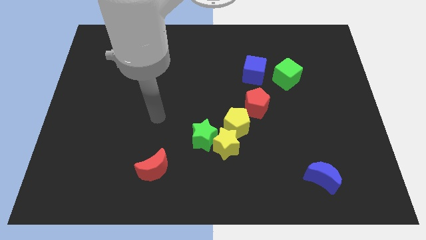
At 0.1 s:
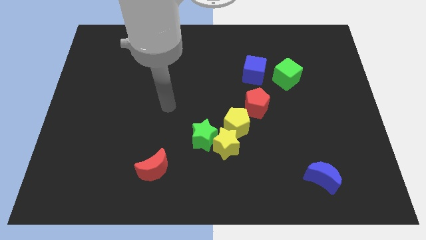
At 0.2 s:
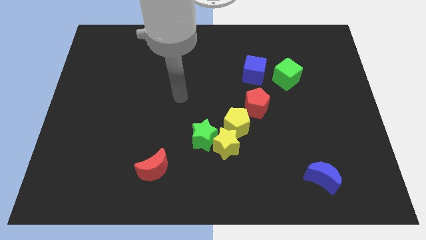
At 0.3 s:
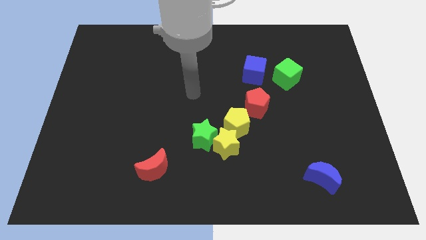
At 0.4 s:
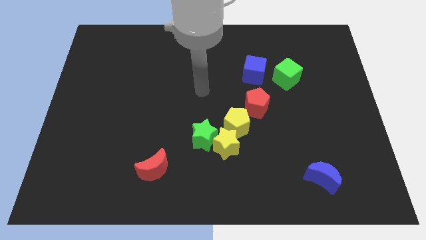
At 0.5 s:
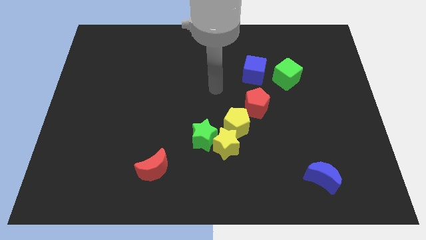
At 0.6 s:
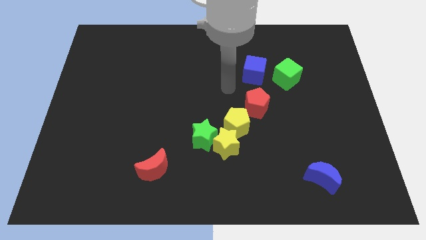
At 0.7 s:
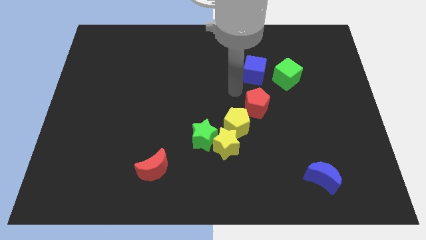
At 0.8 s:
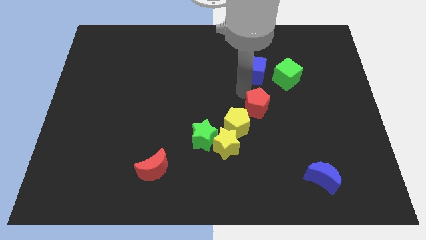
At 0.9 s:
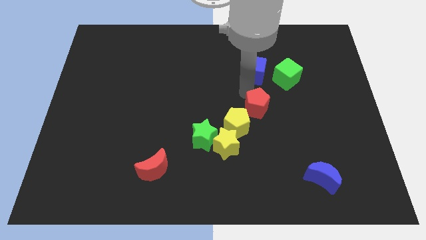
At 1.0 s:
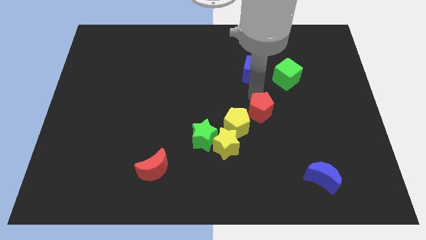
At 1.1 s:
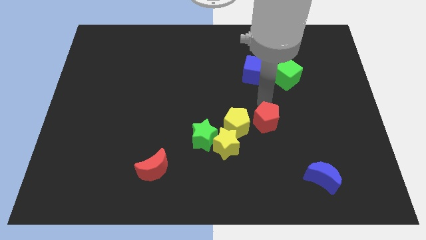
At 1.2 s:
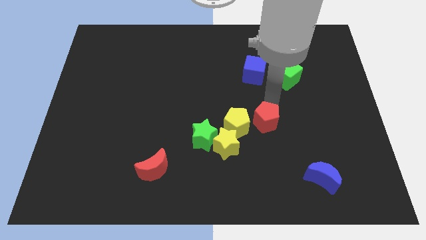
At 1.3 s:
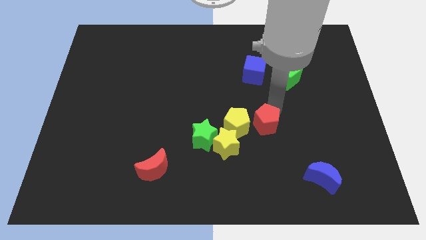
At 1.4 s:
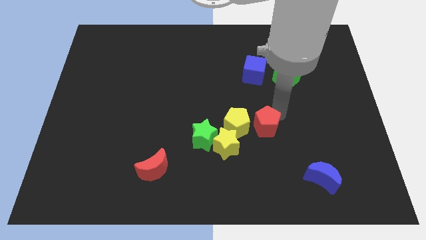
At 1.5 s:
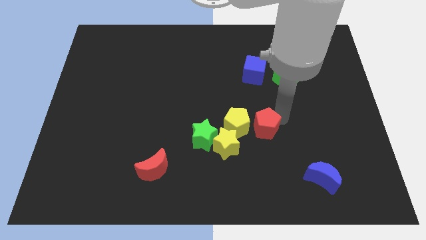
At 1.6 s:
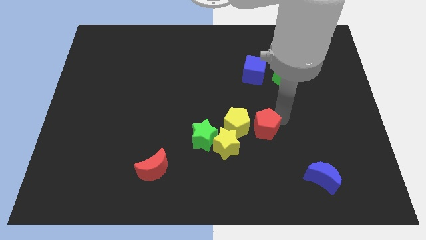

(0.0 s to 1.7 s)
push the red pentagon right to the yellow pentagon

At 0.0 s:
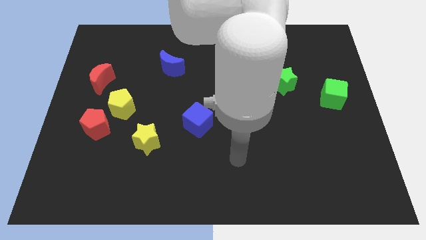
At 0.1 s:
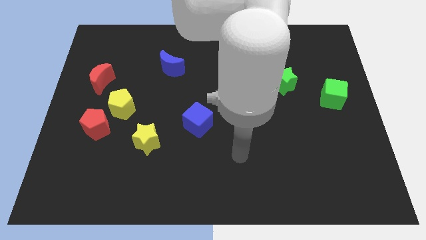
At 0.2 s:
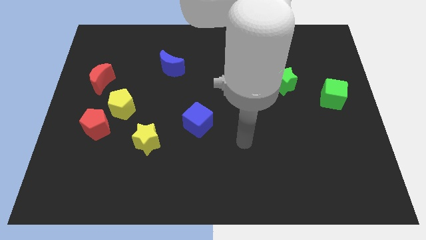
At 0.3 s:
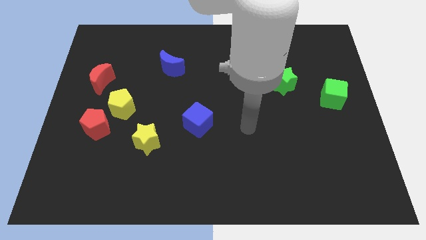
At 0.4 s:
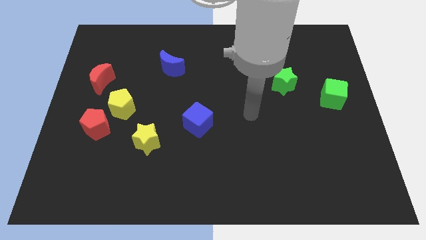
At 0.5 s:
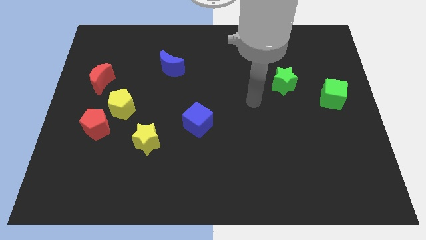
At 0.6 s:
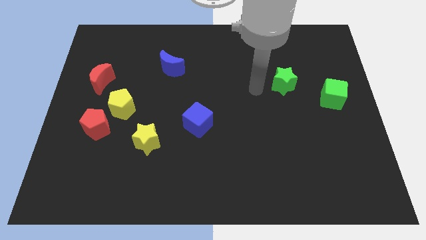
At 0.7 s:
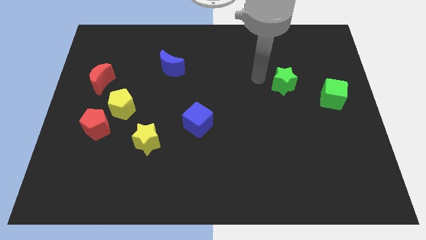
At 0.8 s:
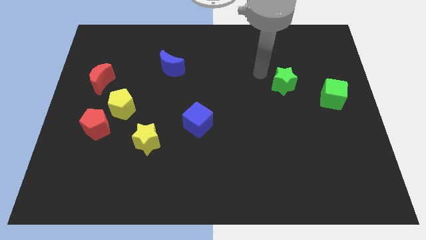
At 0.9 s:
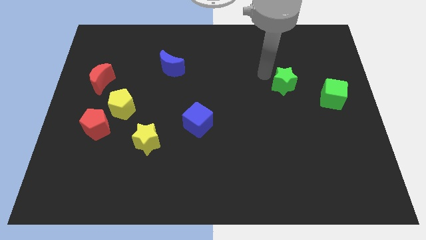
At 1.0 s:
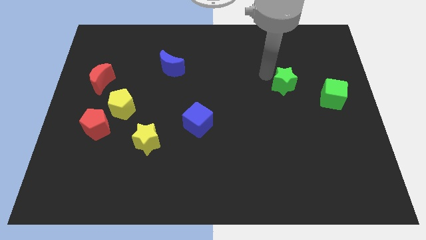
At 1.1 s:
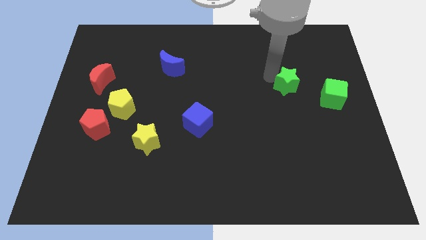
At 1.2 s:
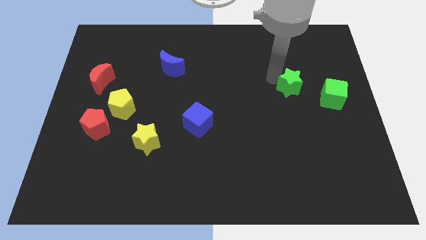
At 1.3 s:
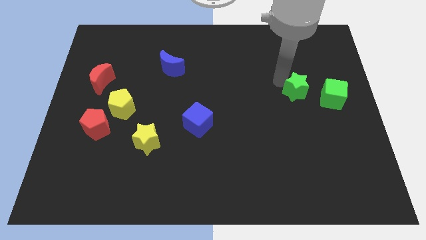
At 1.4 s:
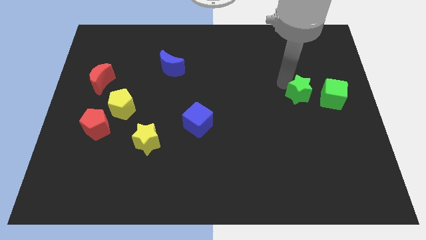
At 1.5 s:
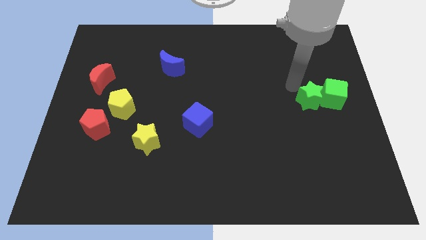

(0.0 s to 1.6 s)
move green star towards the green cube

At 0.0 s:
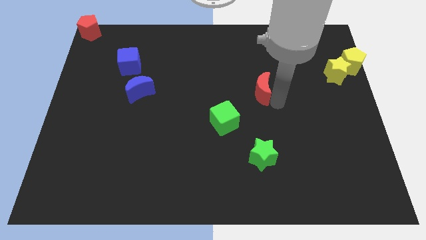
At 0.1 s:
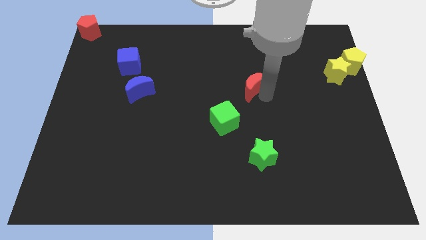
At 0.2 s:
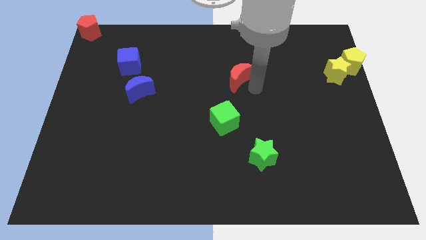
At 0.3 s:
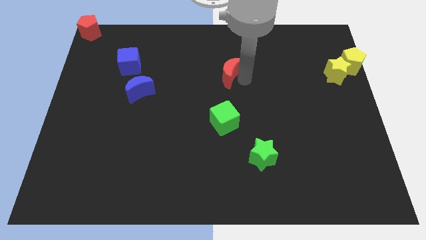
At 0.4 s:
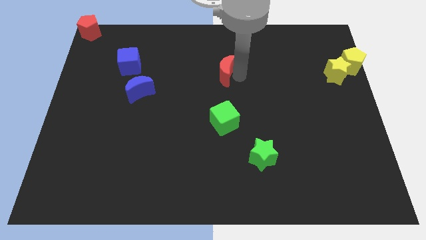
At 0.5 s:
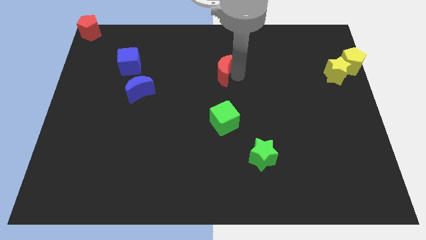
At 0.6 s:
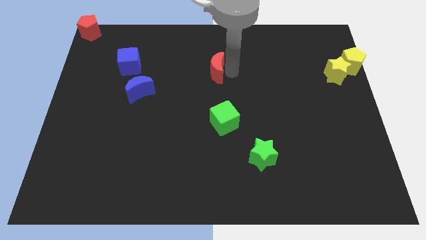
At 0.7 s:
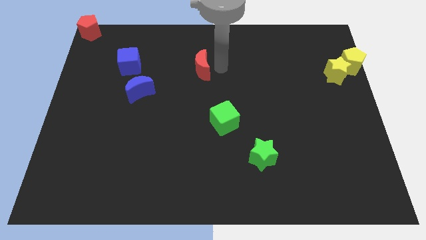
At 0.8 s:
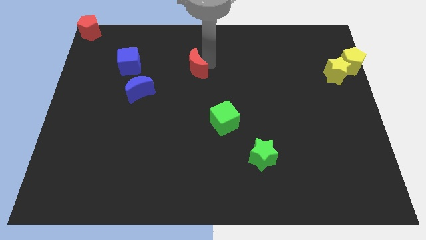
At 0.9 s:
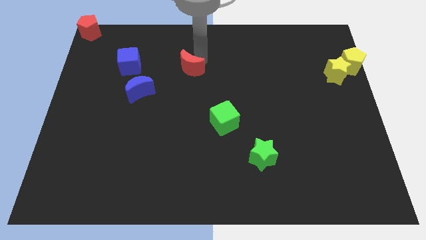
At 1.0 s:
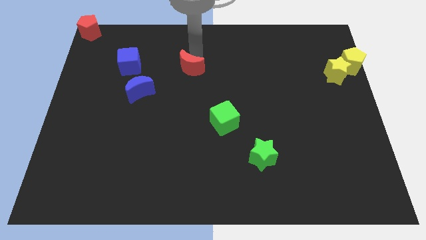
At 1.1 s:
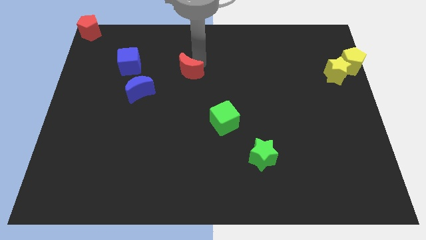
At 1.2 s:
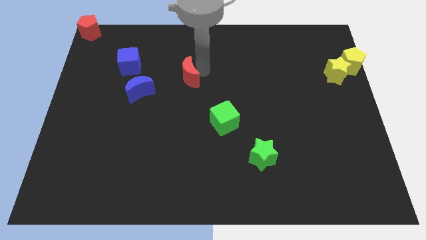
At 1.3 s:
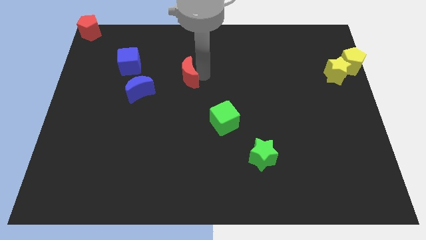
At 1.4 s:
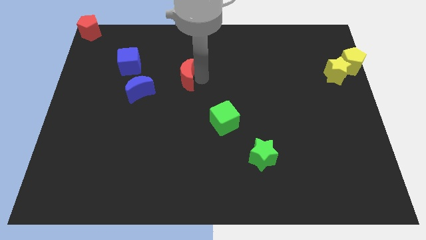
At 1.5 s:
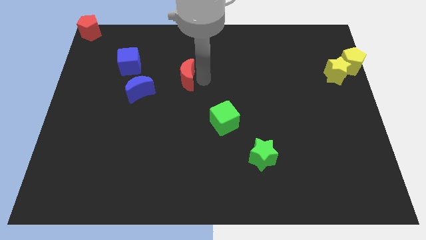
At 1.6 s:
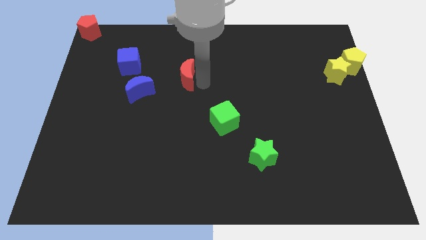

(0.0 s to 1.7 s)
place the red crescent at right side of the blue crescent

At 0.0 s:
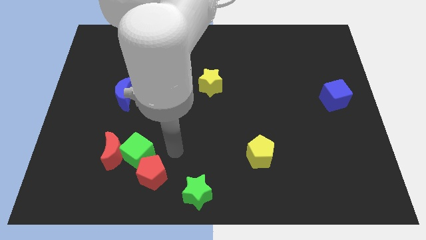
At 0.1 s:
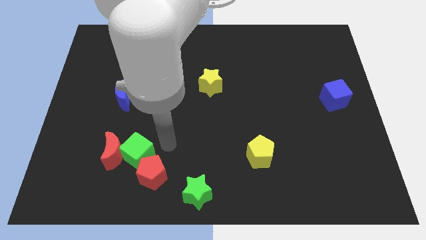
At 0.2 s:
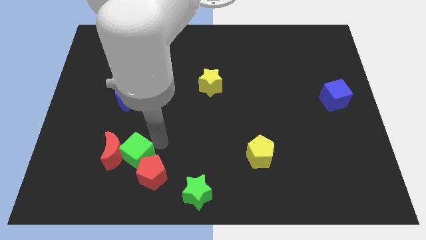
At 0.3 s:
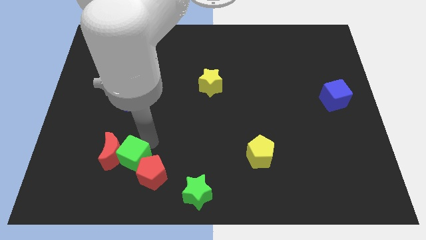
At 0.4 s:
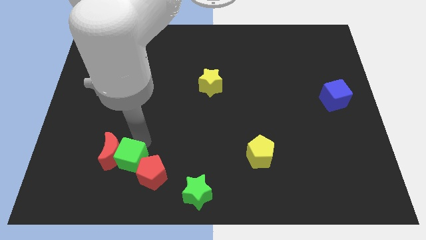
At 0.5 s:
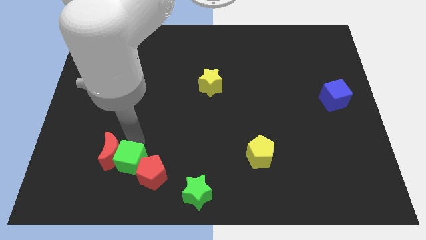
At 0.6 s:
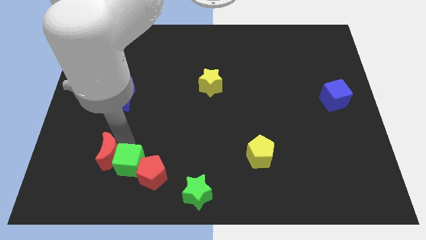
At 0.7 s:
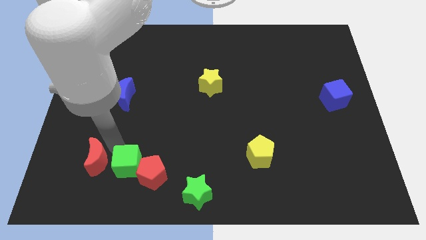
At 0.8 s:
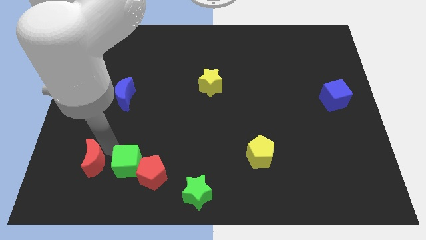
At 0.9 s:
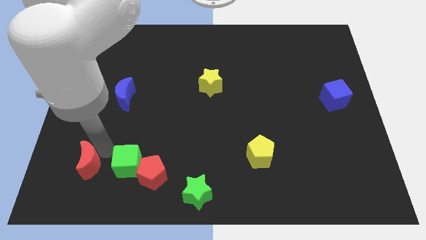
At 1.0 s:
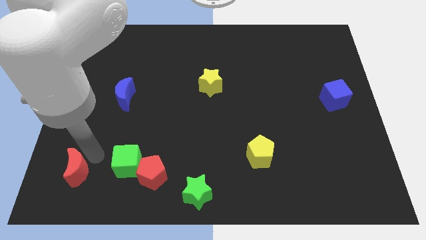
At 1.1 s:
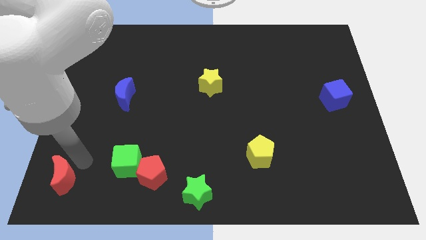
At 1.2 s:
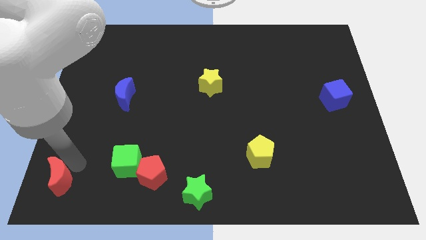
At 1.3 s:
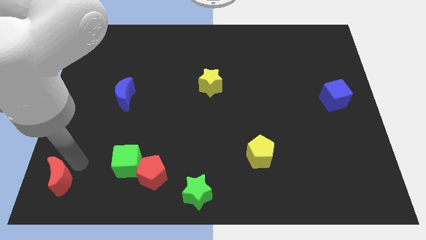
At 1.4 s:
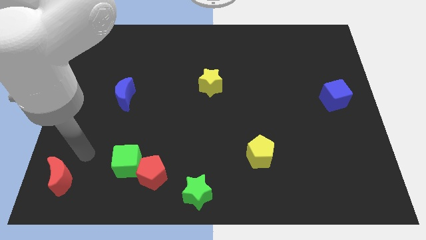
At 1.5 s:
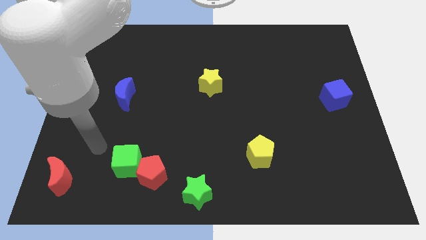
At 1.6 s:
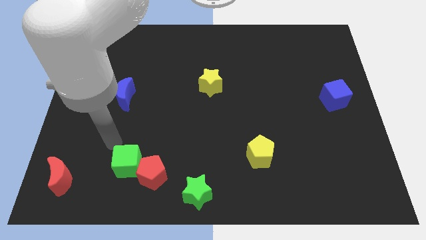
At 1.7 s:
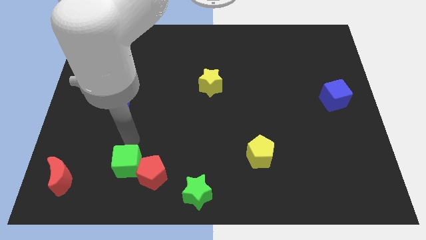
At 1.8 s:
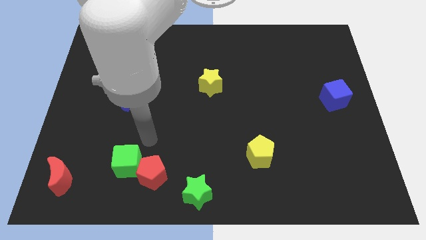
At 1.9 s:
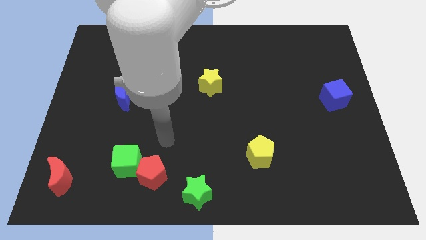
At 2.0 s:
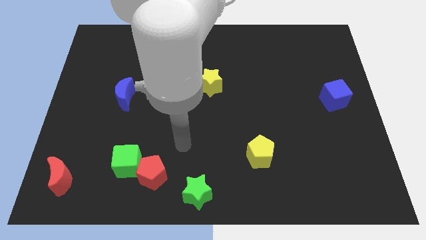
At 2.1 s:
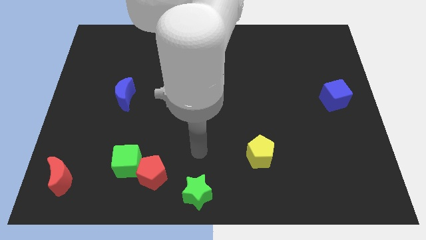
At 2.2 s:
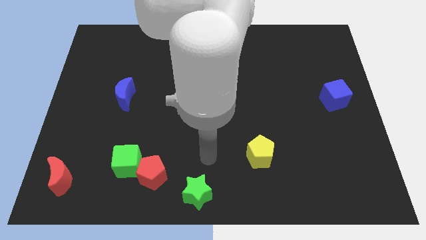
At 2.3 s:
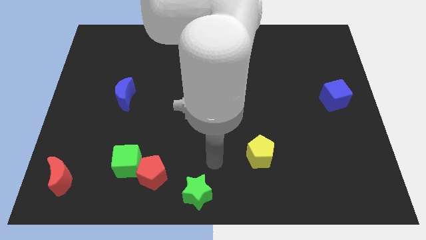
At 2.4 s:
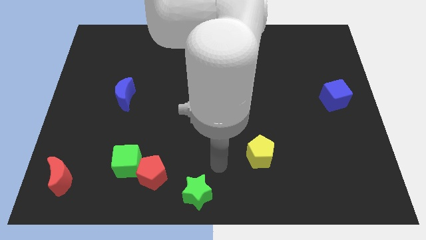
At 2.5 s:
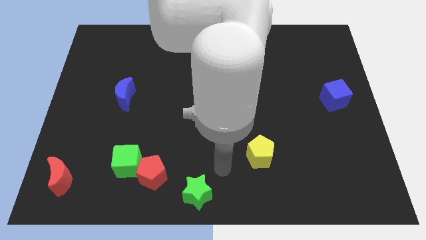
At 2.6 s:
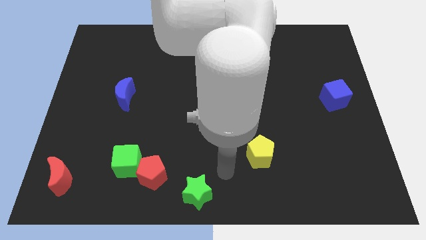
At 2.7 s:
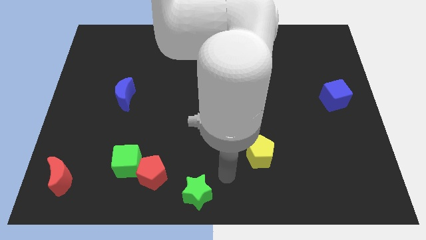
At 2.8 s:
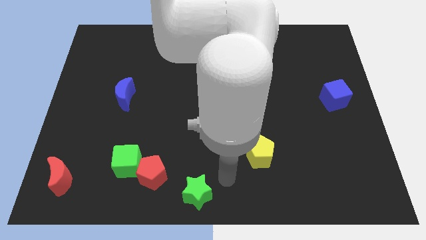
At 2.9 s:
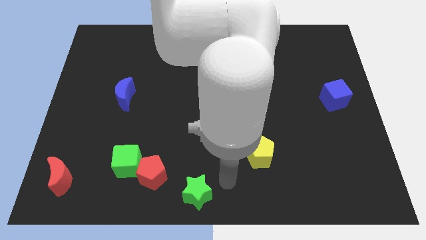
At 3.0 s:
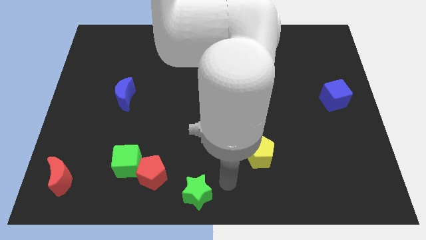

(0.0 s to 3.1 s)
move the red moon away from the green cube

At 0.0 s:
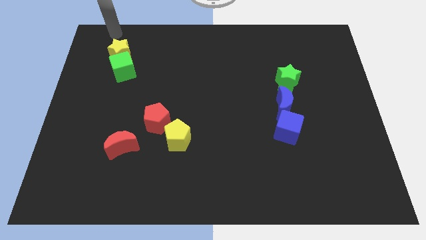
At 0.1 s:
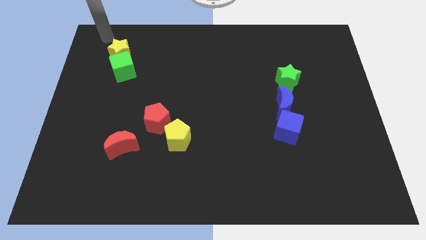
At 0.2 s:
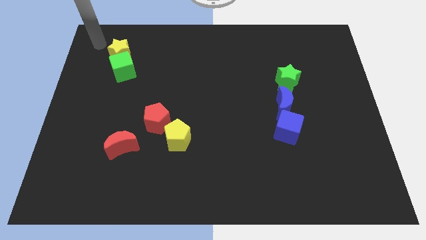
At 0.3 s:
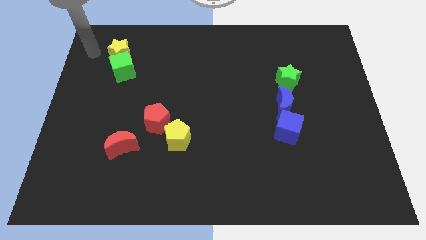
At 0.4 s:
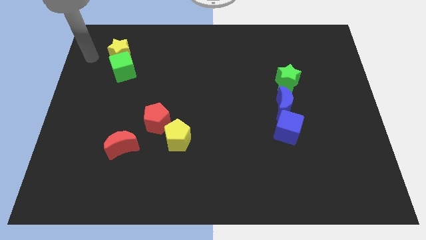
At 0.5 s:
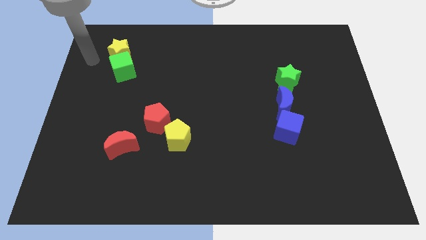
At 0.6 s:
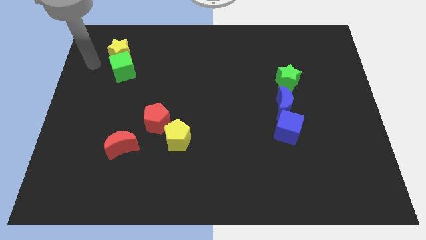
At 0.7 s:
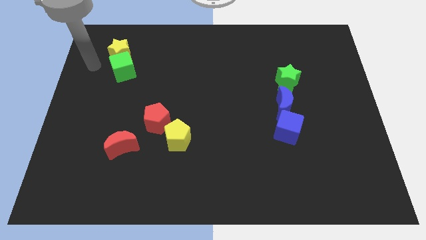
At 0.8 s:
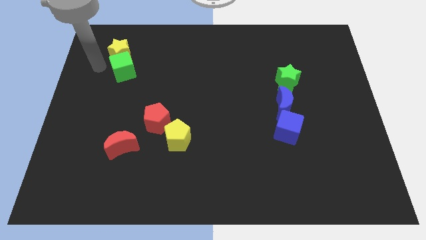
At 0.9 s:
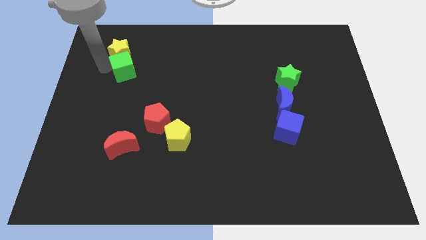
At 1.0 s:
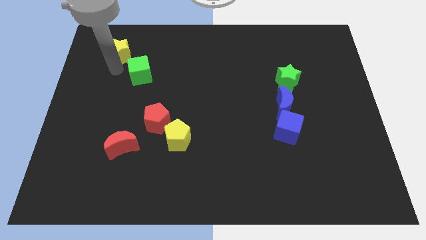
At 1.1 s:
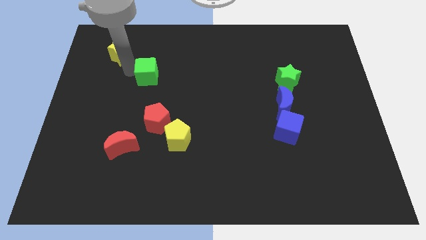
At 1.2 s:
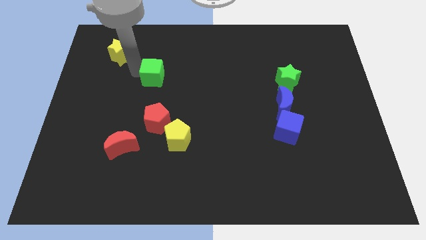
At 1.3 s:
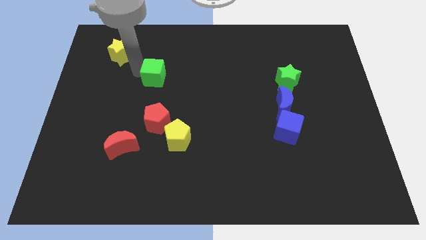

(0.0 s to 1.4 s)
place the green cube above the red pentagon
